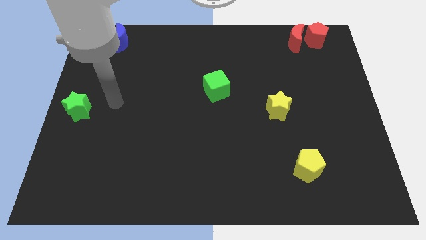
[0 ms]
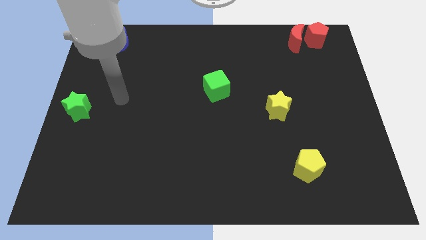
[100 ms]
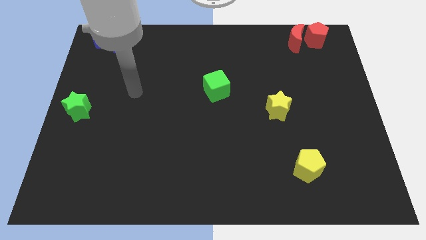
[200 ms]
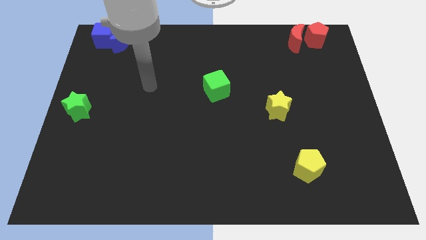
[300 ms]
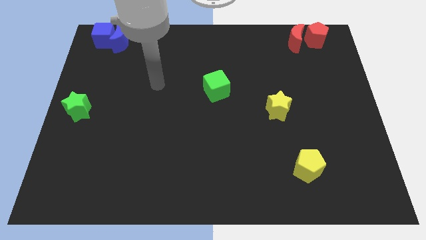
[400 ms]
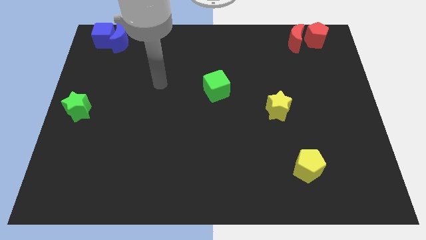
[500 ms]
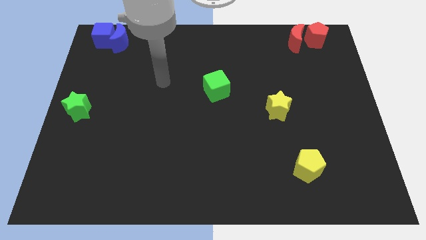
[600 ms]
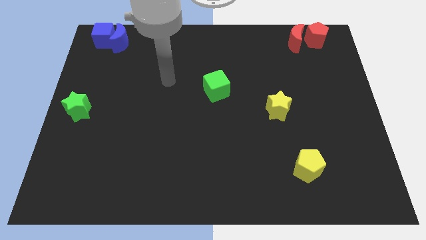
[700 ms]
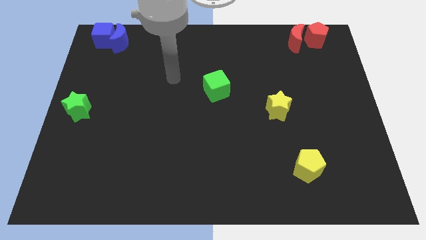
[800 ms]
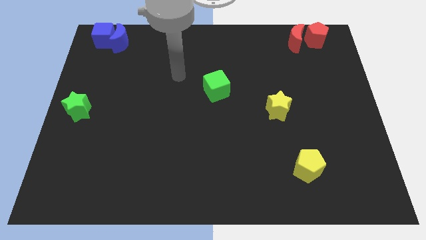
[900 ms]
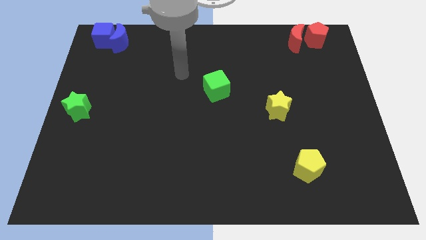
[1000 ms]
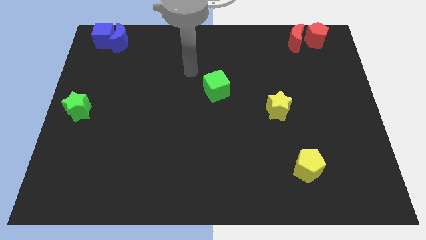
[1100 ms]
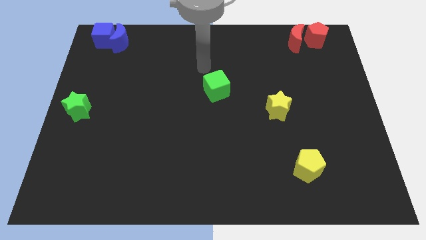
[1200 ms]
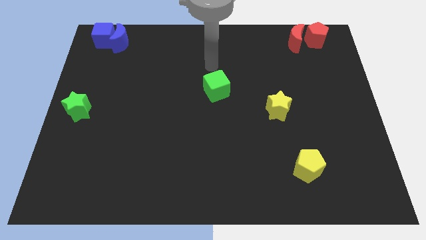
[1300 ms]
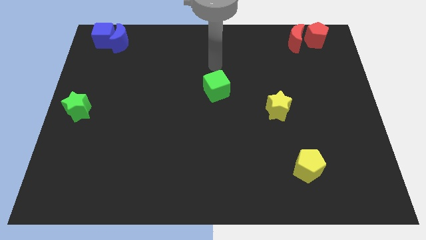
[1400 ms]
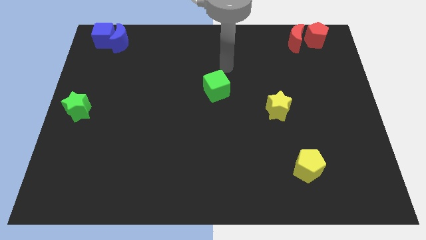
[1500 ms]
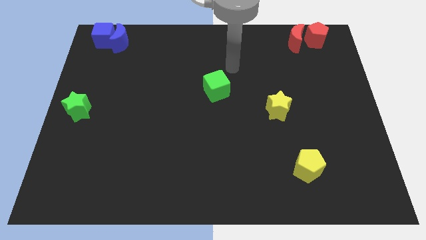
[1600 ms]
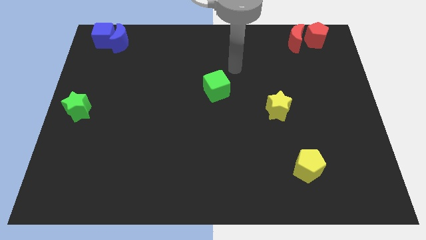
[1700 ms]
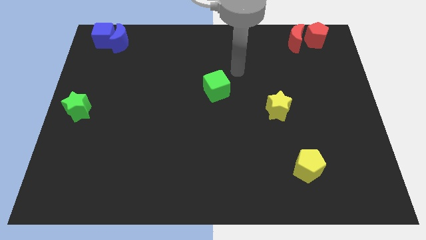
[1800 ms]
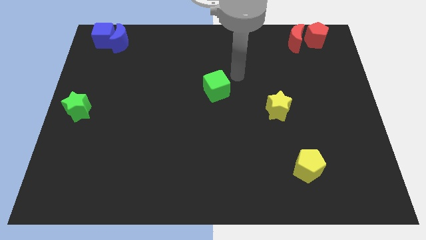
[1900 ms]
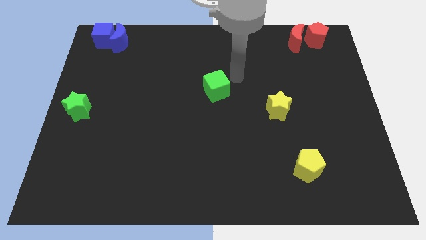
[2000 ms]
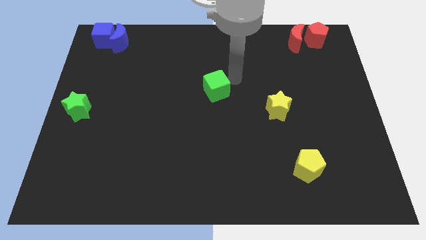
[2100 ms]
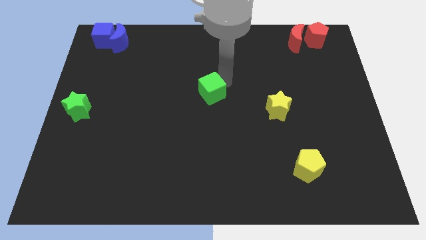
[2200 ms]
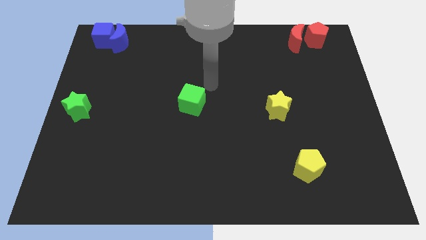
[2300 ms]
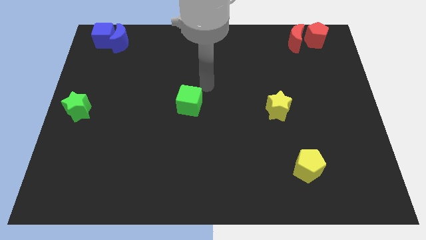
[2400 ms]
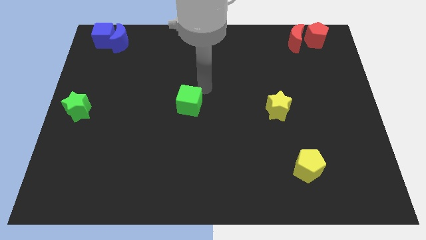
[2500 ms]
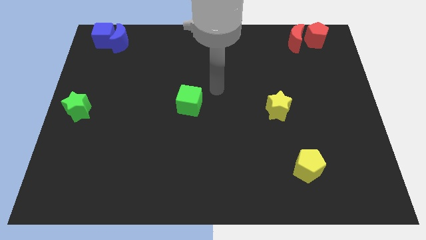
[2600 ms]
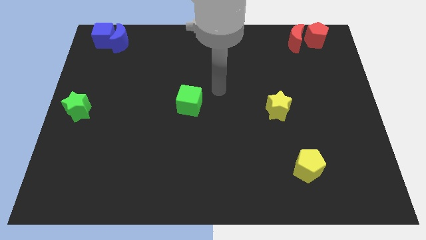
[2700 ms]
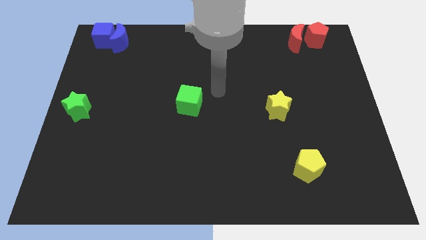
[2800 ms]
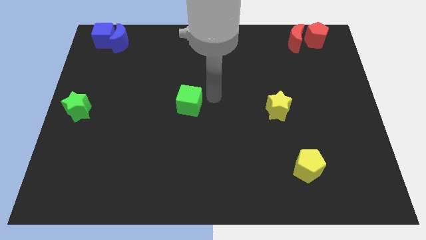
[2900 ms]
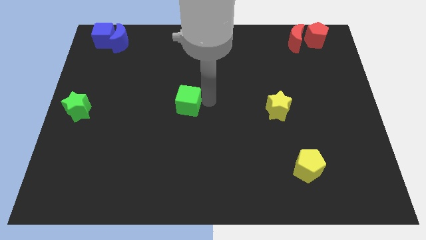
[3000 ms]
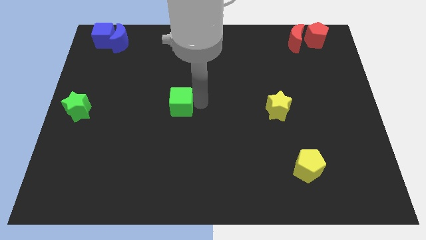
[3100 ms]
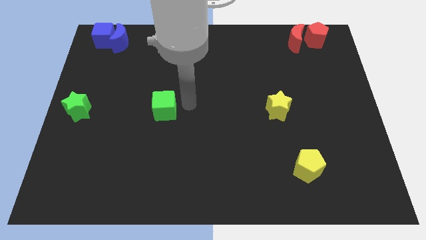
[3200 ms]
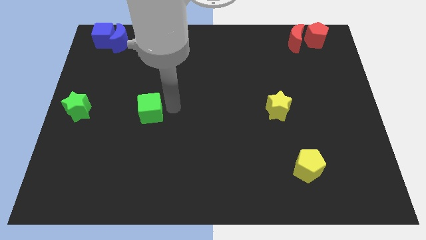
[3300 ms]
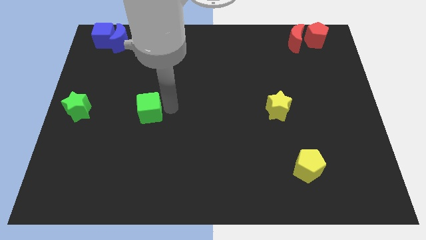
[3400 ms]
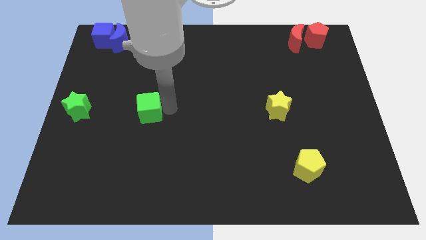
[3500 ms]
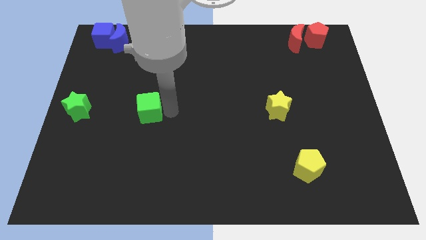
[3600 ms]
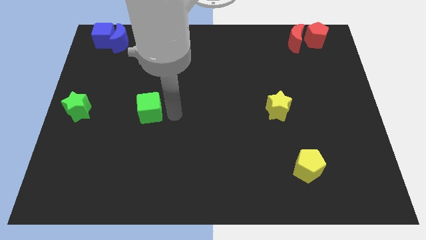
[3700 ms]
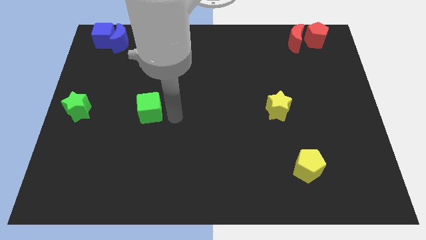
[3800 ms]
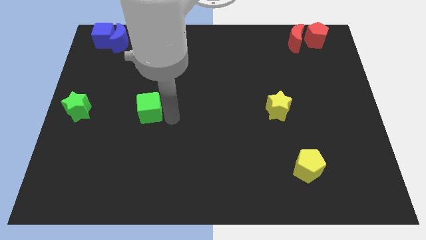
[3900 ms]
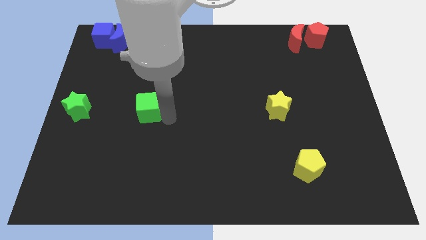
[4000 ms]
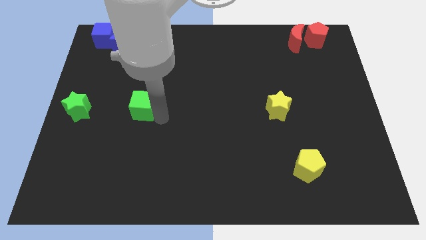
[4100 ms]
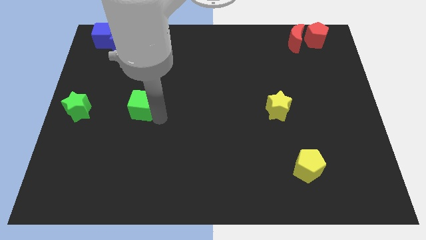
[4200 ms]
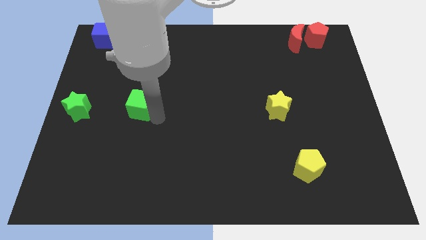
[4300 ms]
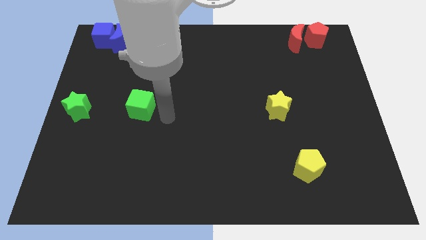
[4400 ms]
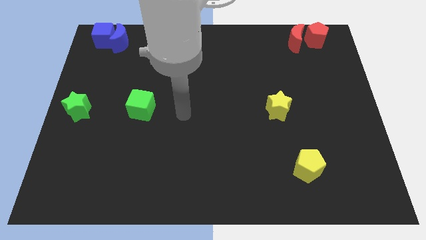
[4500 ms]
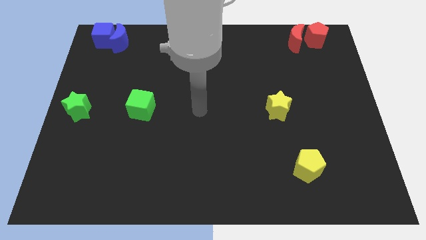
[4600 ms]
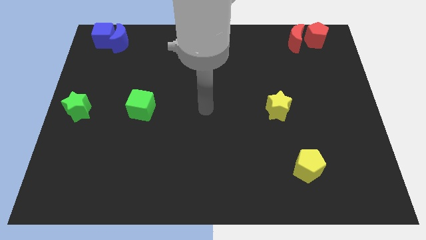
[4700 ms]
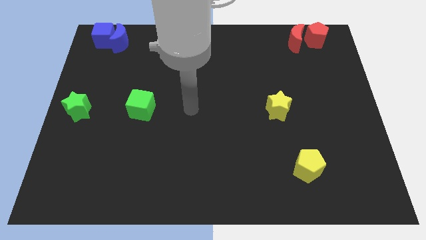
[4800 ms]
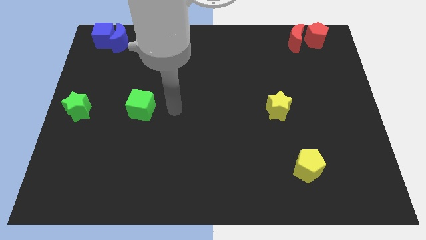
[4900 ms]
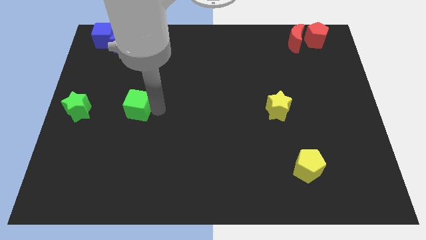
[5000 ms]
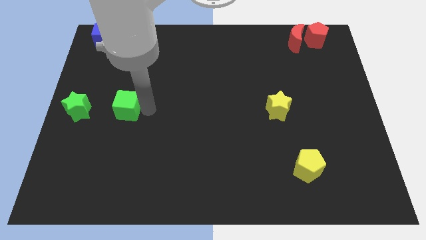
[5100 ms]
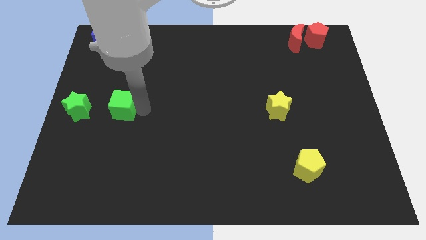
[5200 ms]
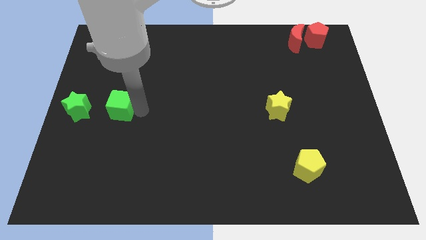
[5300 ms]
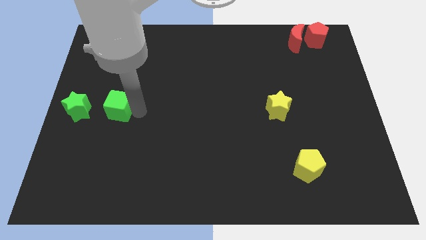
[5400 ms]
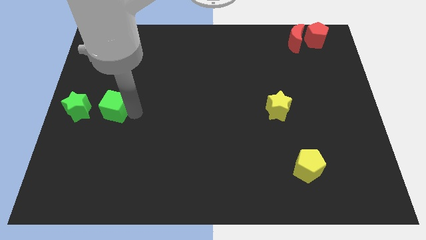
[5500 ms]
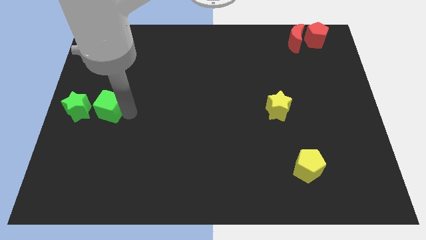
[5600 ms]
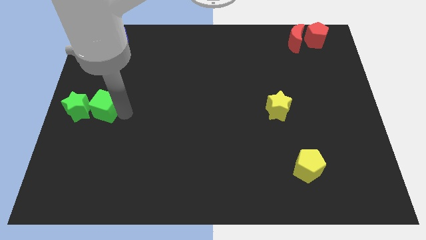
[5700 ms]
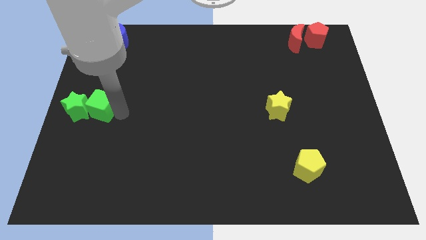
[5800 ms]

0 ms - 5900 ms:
push the green cube towards the green star

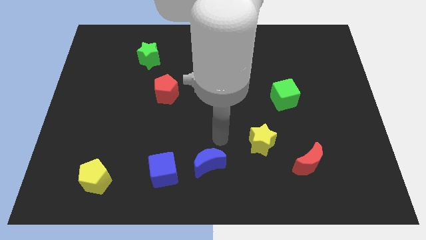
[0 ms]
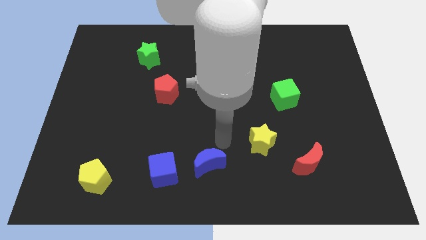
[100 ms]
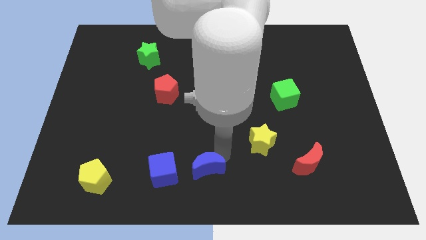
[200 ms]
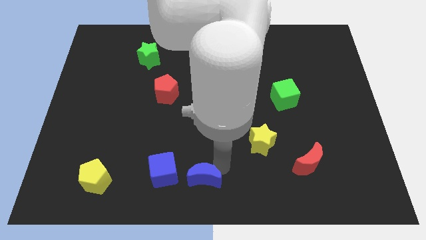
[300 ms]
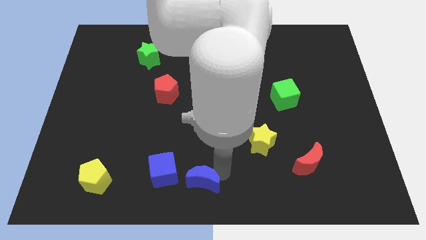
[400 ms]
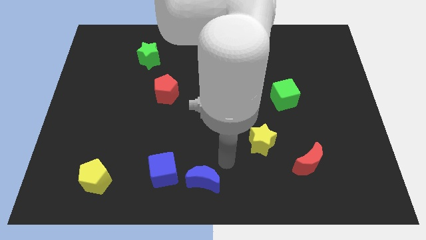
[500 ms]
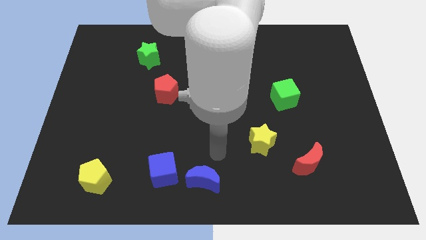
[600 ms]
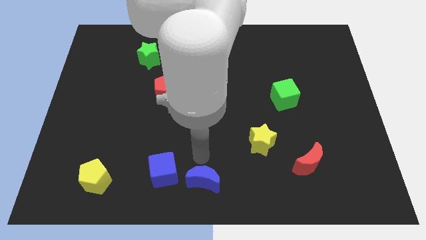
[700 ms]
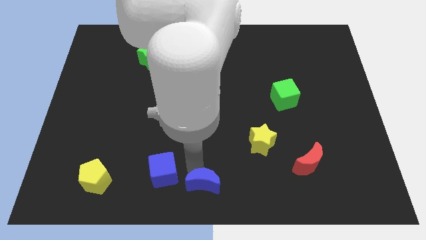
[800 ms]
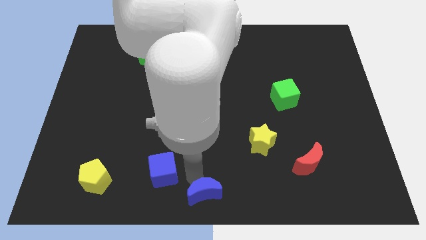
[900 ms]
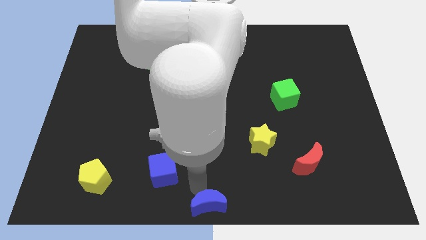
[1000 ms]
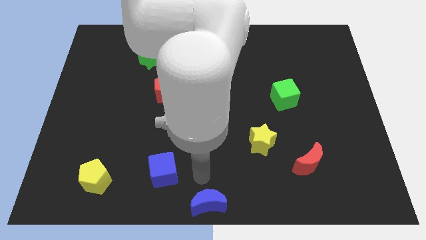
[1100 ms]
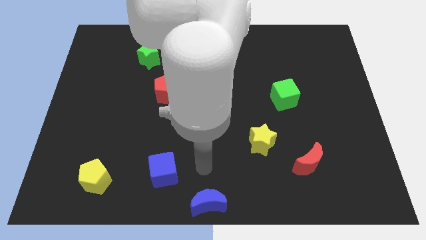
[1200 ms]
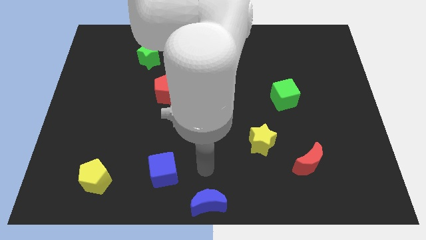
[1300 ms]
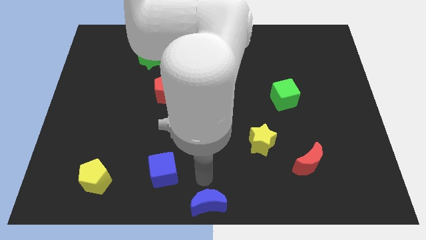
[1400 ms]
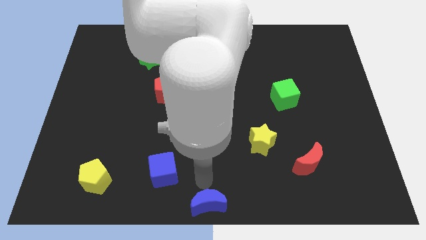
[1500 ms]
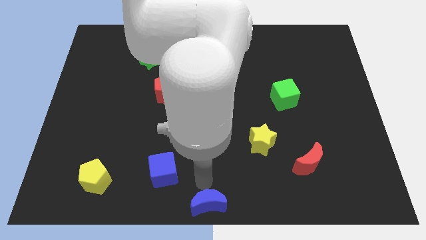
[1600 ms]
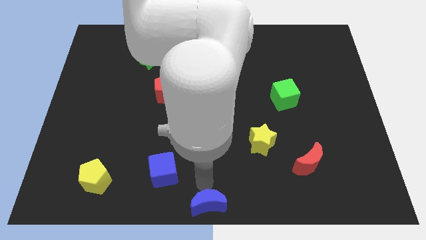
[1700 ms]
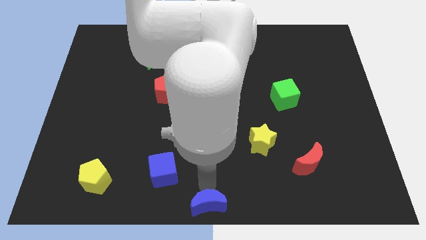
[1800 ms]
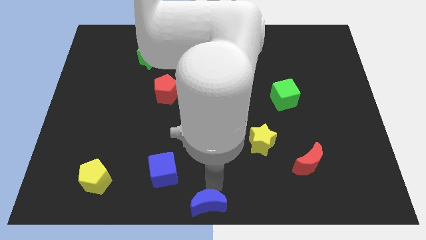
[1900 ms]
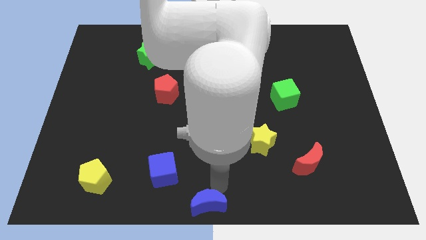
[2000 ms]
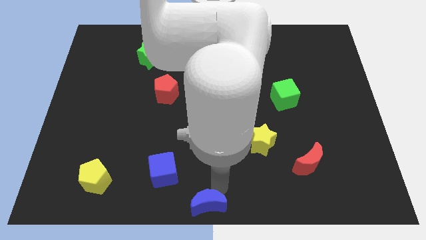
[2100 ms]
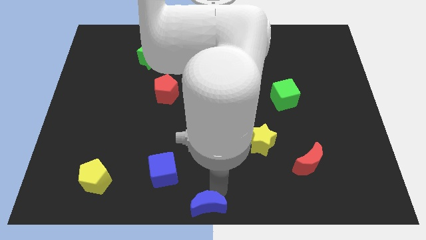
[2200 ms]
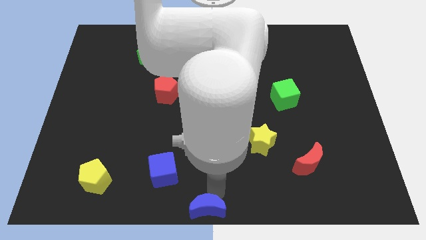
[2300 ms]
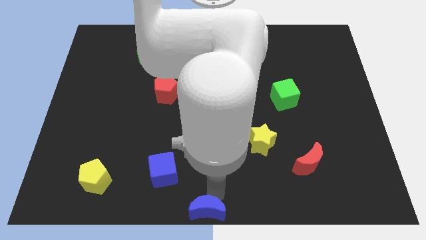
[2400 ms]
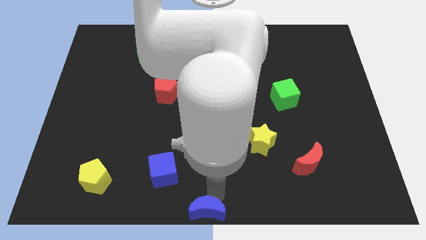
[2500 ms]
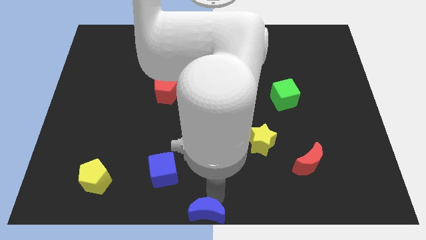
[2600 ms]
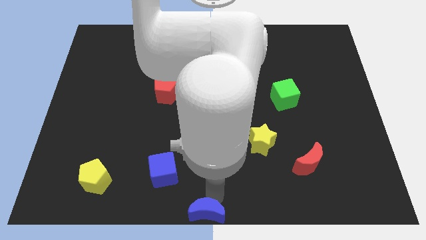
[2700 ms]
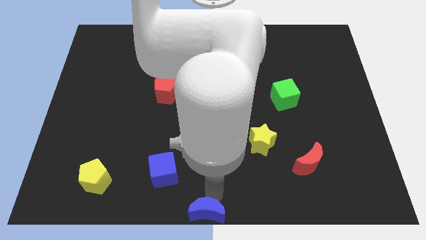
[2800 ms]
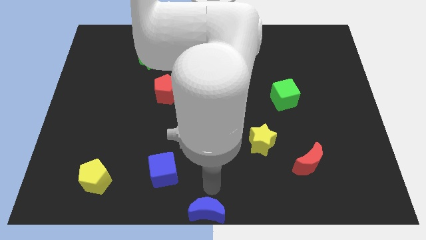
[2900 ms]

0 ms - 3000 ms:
move the blue crescent to the bottom center of the board

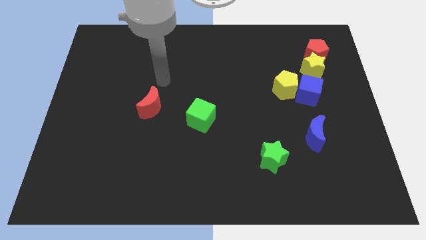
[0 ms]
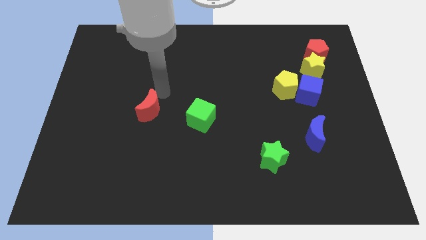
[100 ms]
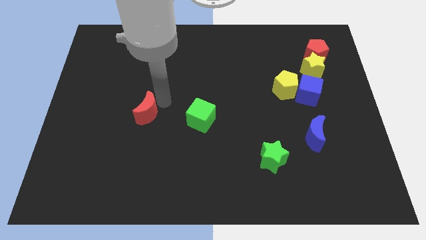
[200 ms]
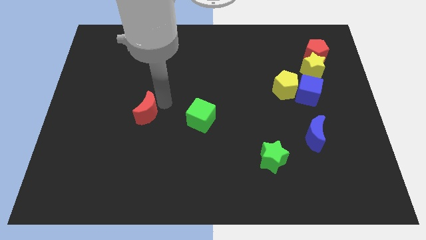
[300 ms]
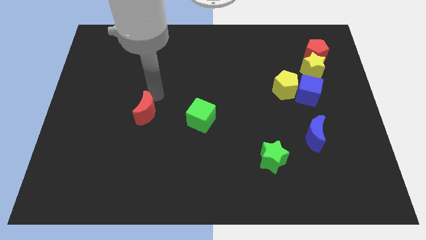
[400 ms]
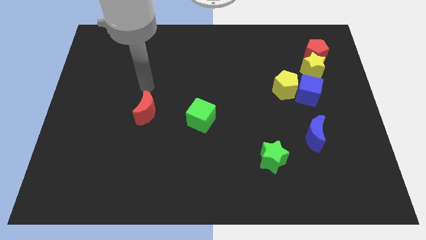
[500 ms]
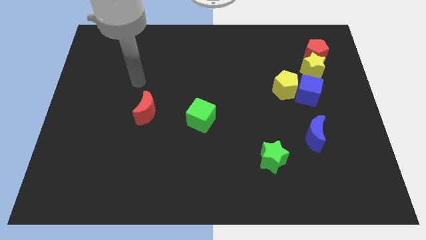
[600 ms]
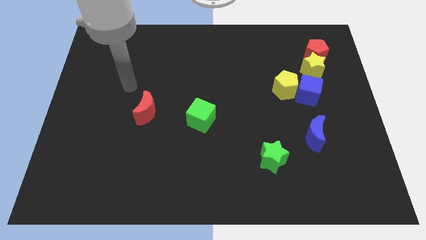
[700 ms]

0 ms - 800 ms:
place the red crescent horizontally to the left side of the green cube
